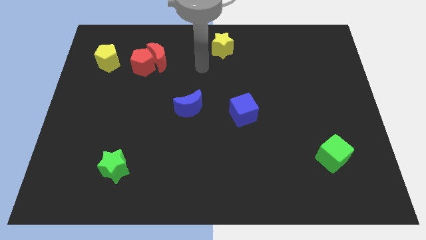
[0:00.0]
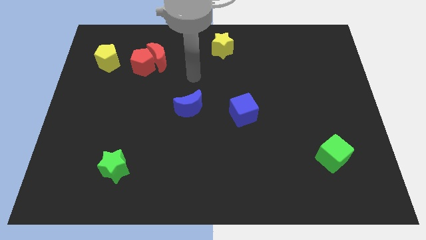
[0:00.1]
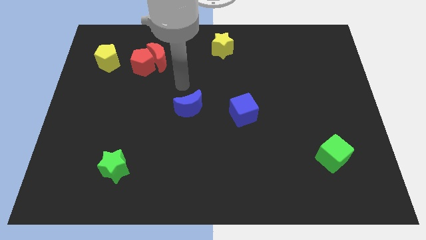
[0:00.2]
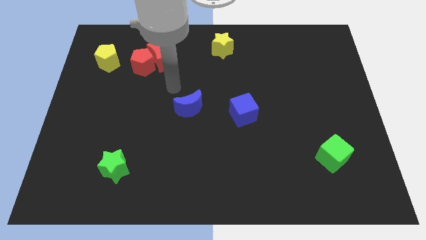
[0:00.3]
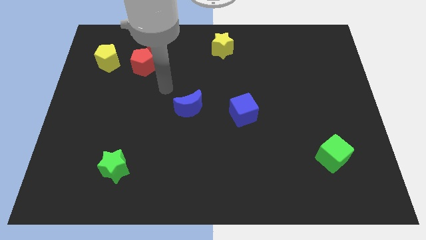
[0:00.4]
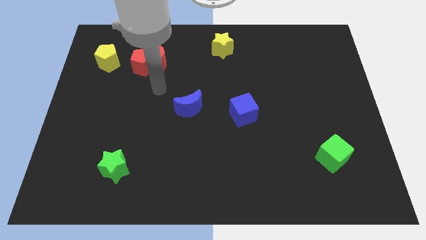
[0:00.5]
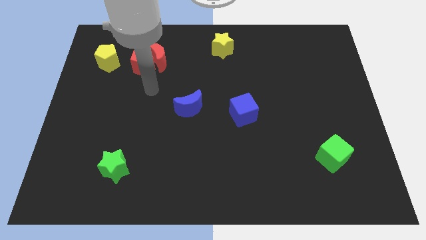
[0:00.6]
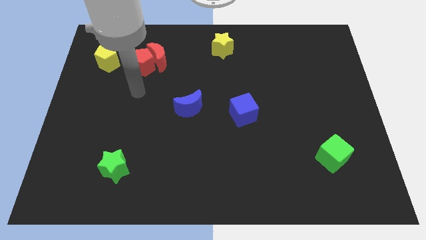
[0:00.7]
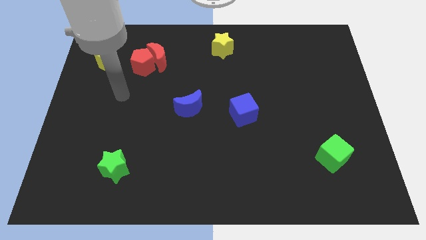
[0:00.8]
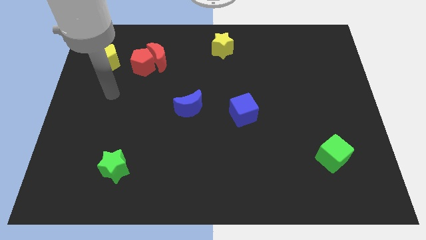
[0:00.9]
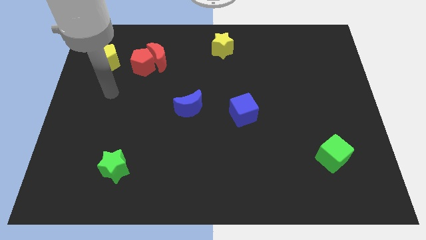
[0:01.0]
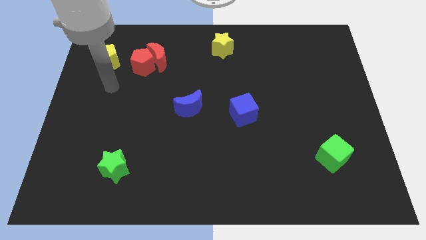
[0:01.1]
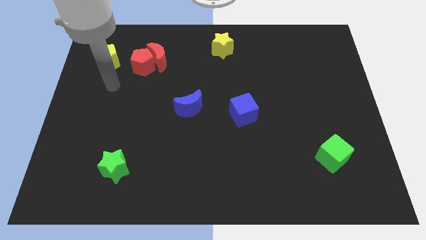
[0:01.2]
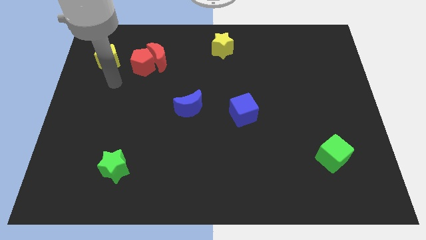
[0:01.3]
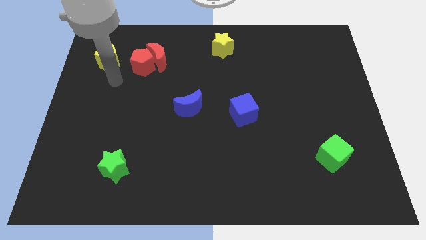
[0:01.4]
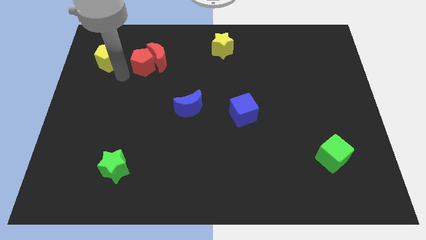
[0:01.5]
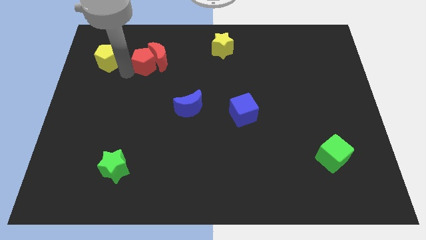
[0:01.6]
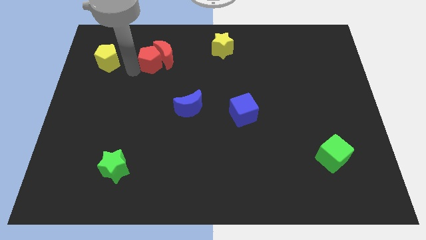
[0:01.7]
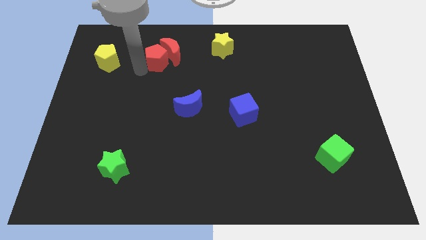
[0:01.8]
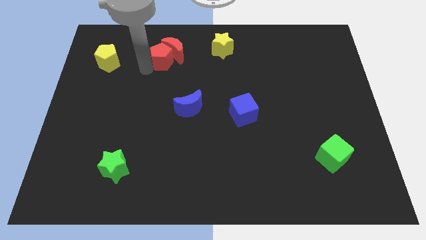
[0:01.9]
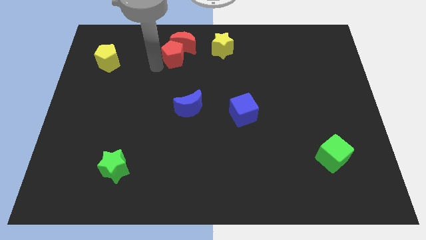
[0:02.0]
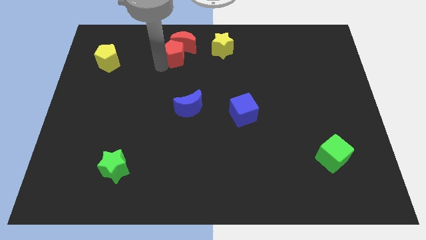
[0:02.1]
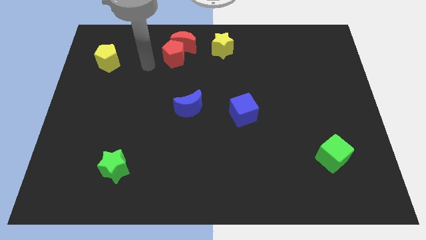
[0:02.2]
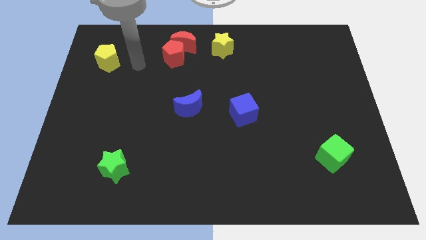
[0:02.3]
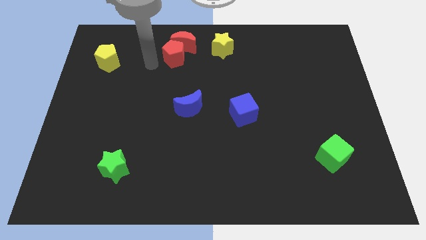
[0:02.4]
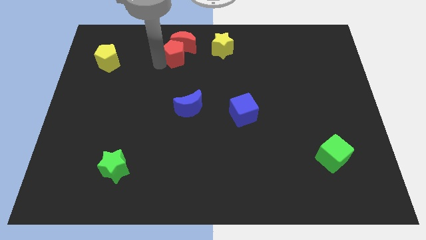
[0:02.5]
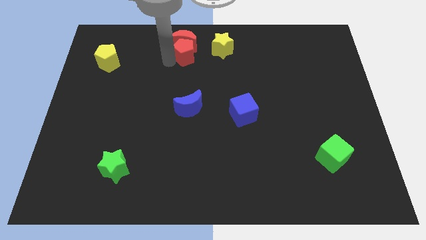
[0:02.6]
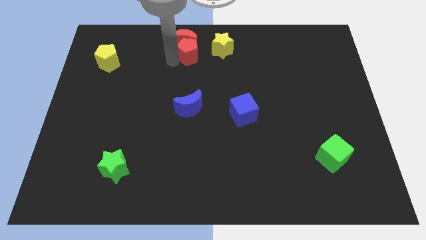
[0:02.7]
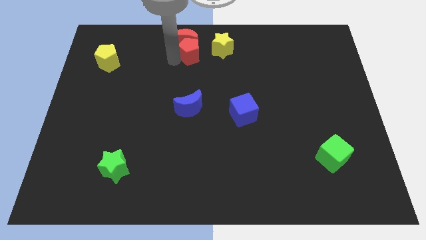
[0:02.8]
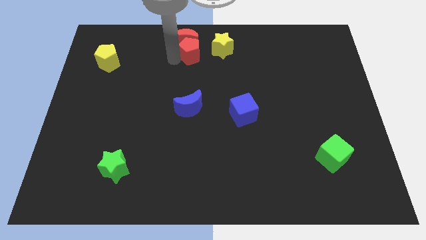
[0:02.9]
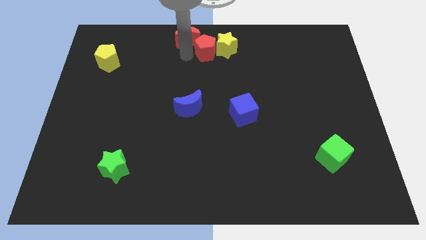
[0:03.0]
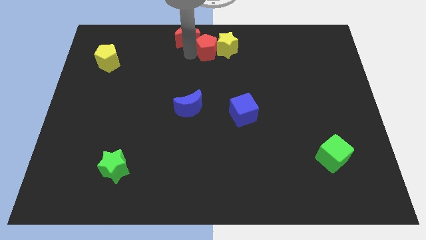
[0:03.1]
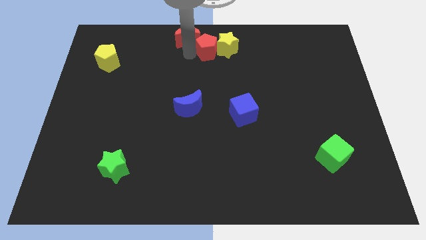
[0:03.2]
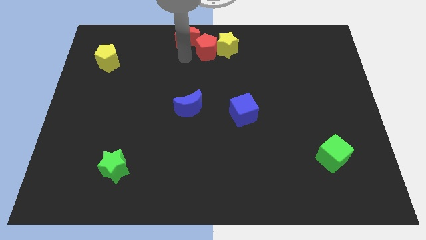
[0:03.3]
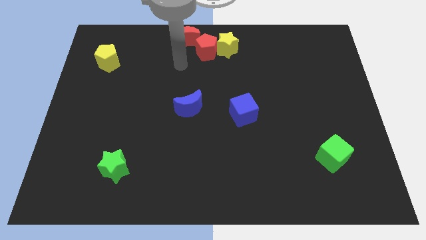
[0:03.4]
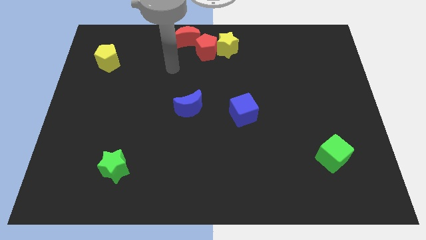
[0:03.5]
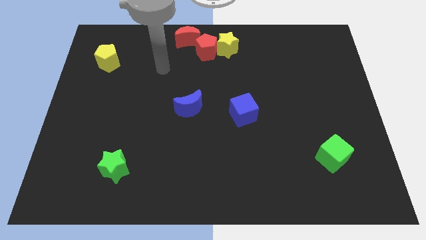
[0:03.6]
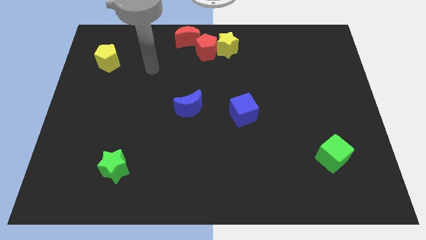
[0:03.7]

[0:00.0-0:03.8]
move the red blocks into the yellow star

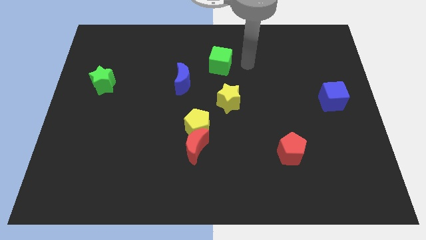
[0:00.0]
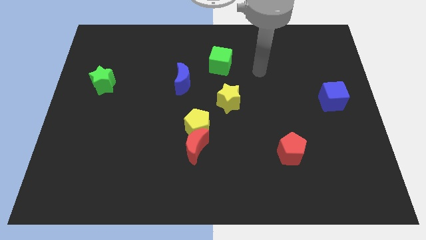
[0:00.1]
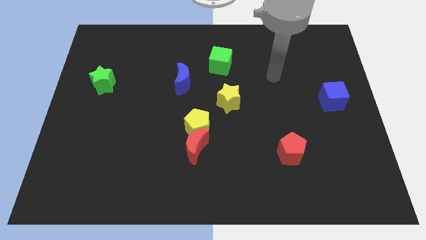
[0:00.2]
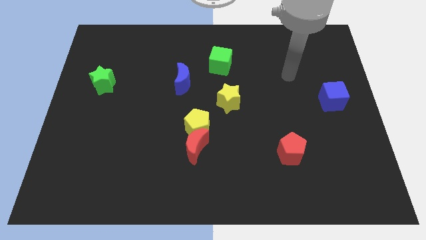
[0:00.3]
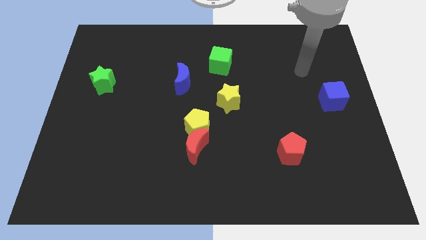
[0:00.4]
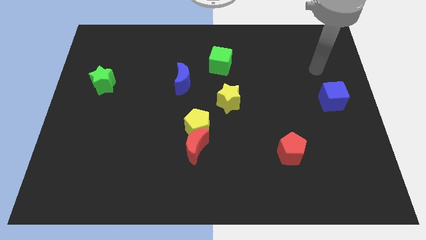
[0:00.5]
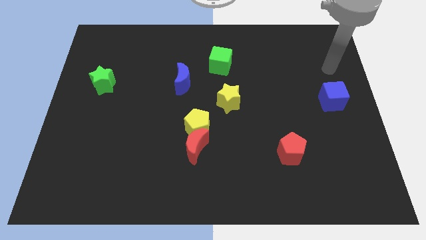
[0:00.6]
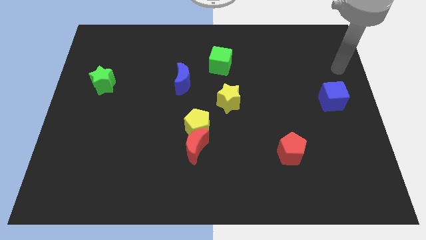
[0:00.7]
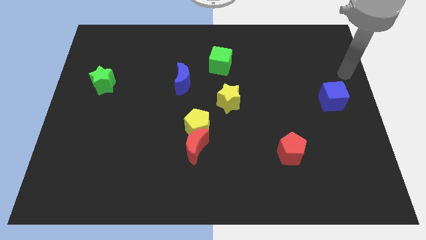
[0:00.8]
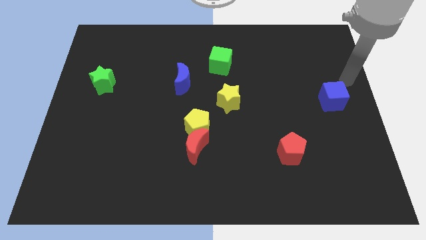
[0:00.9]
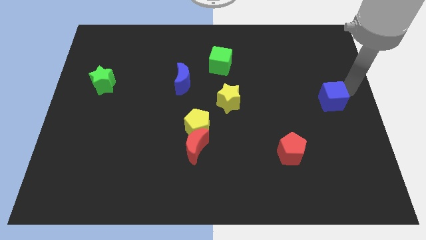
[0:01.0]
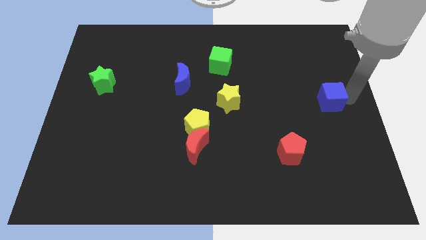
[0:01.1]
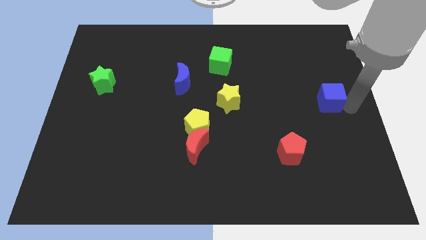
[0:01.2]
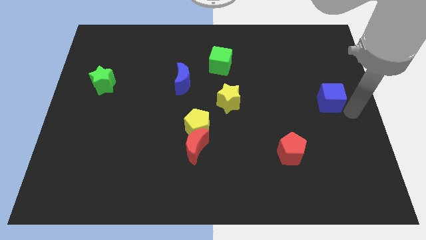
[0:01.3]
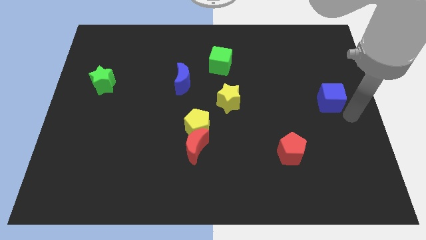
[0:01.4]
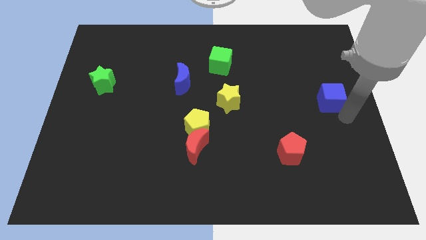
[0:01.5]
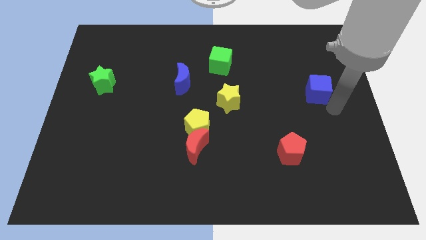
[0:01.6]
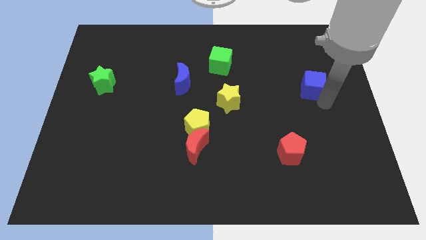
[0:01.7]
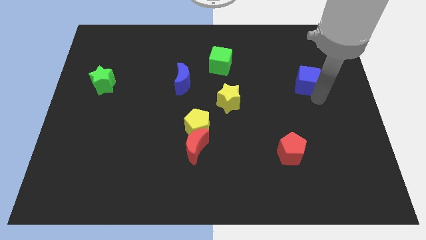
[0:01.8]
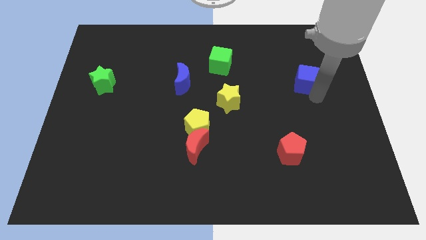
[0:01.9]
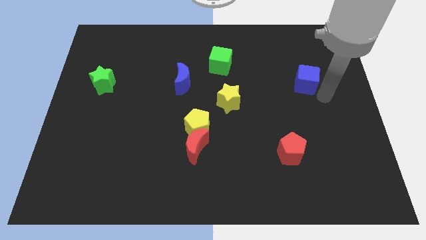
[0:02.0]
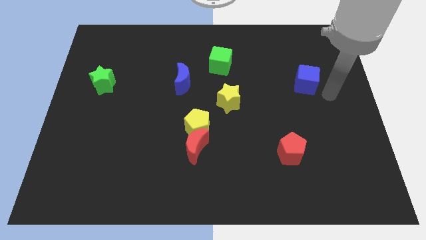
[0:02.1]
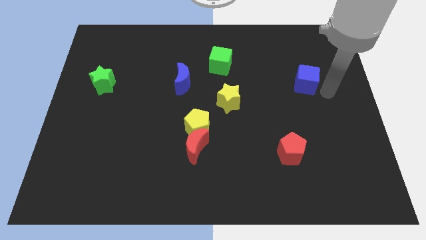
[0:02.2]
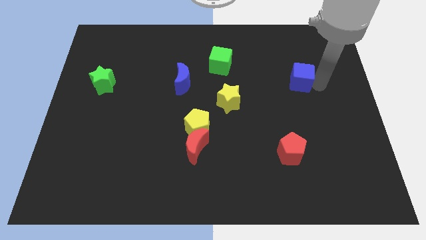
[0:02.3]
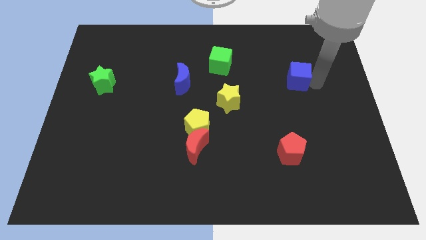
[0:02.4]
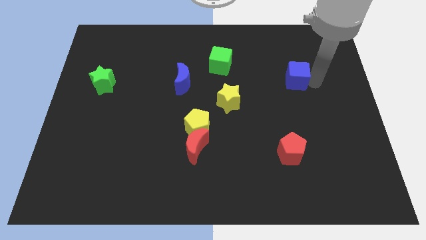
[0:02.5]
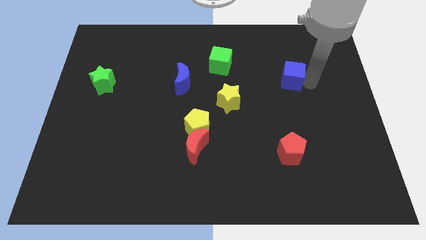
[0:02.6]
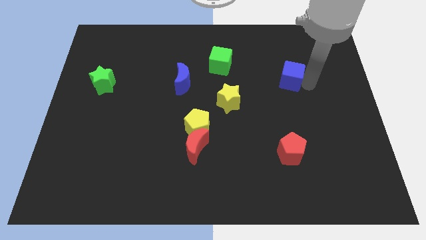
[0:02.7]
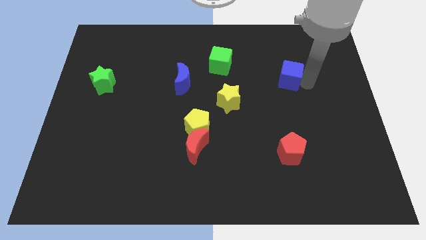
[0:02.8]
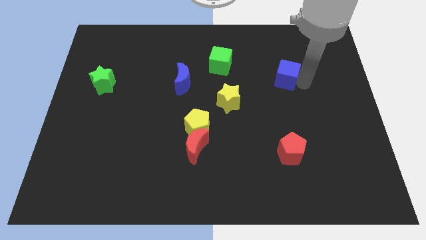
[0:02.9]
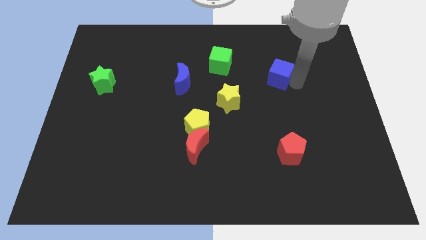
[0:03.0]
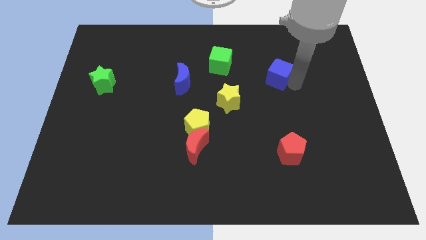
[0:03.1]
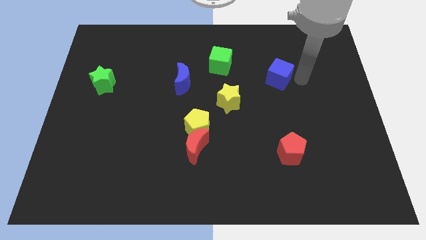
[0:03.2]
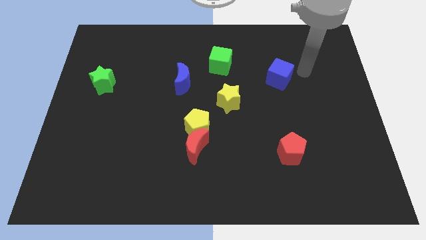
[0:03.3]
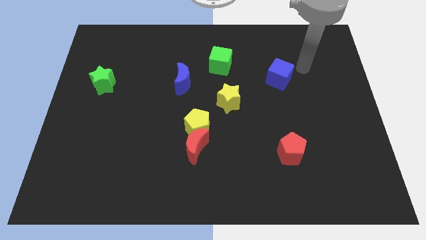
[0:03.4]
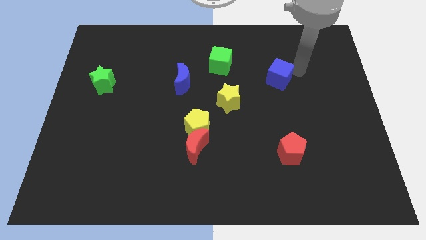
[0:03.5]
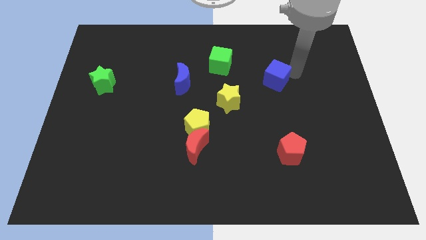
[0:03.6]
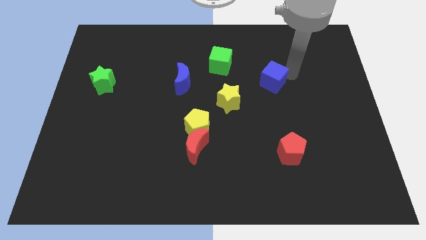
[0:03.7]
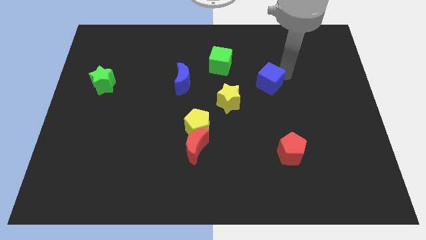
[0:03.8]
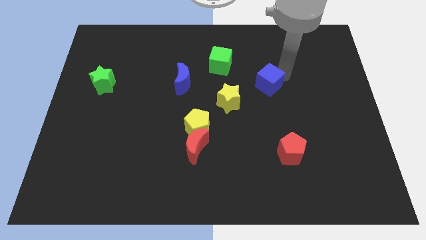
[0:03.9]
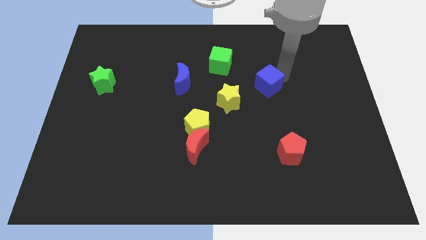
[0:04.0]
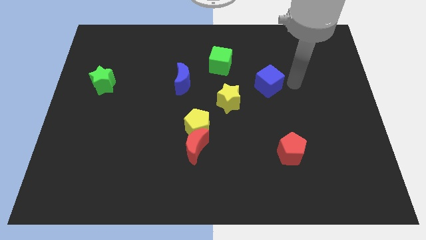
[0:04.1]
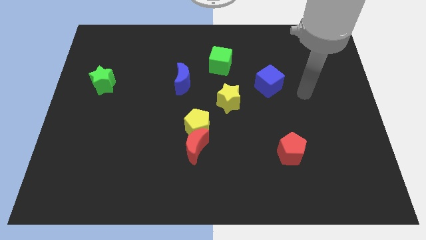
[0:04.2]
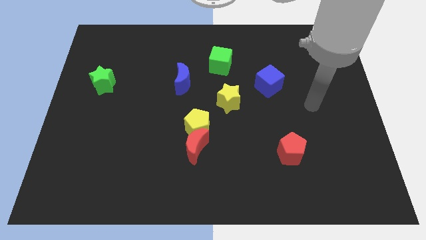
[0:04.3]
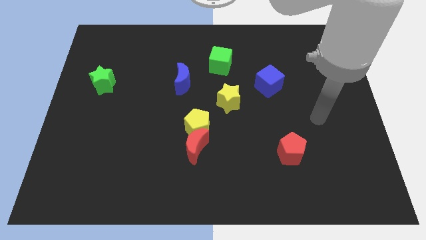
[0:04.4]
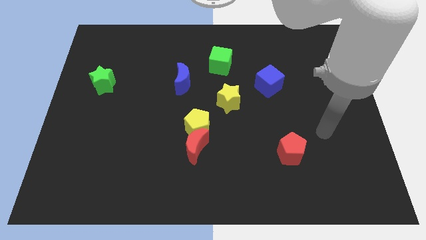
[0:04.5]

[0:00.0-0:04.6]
place the blue cube at the top right of the yellow star

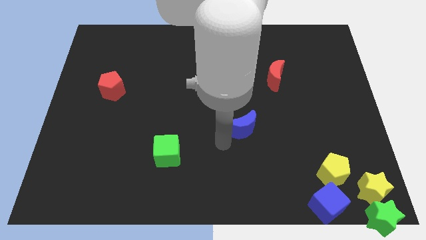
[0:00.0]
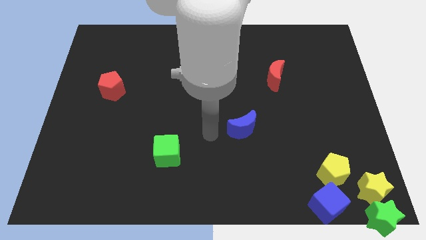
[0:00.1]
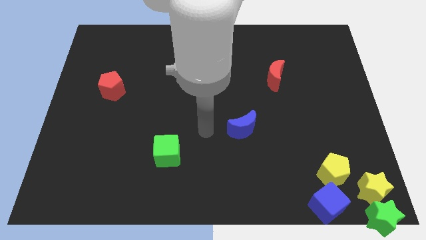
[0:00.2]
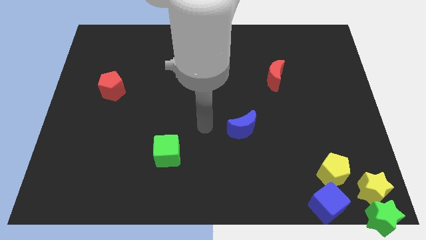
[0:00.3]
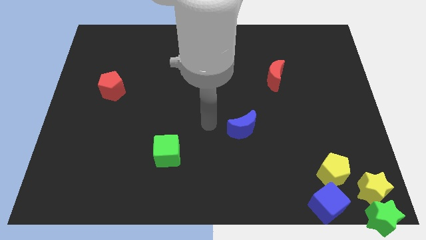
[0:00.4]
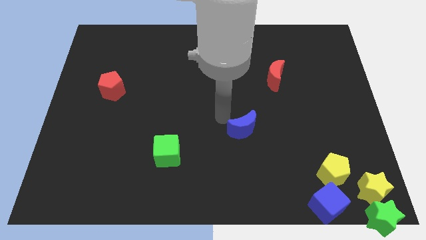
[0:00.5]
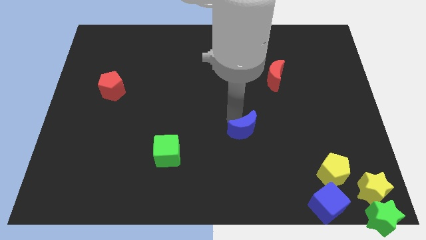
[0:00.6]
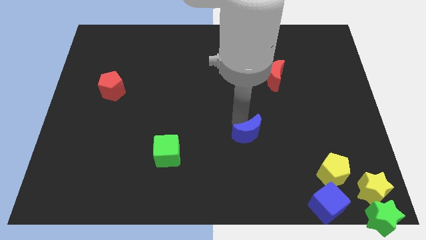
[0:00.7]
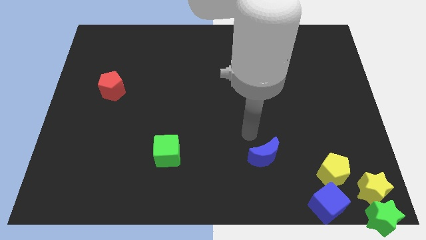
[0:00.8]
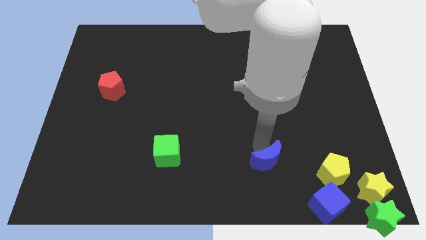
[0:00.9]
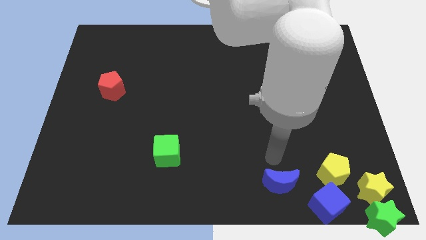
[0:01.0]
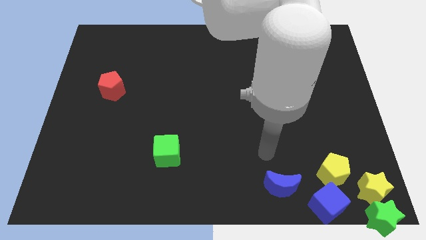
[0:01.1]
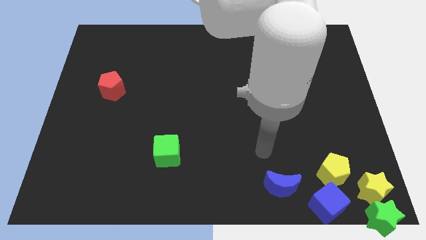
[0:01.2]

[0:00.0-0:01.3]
move blue moon towards blue cube
